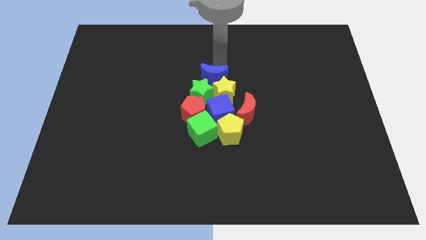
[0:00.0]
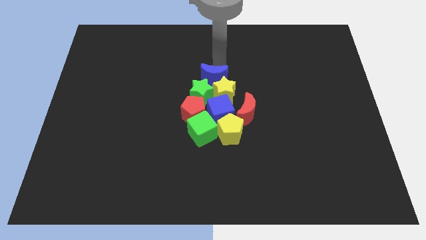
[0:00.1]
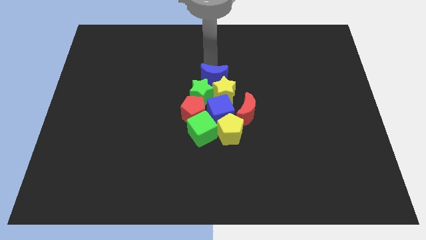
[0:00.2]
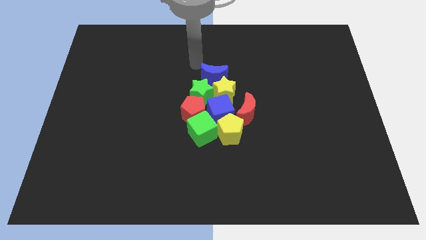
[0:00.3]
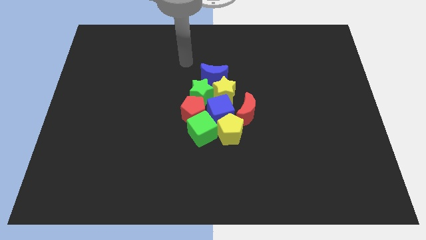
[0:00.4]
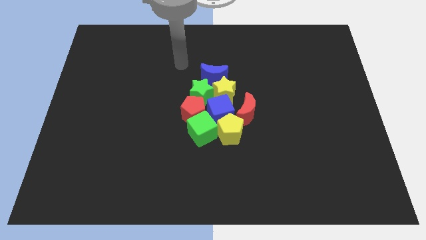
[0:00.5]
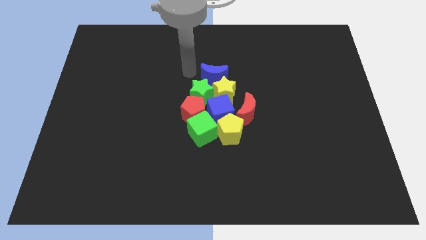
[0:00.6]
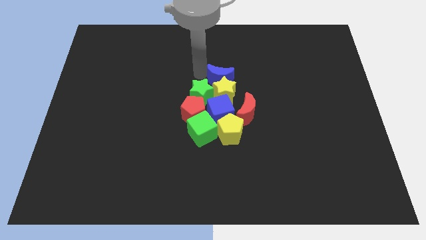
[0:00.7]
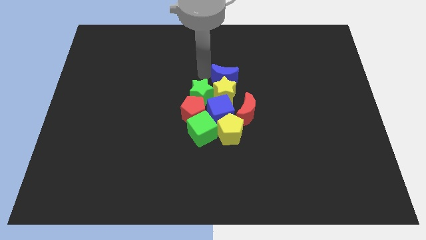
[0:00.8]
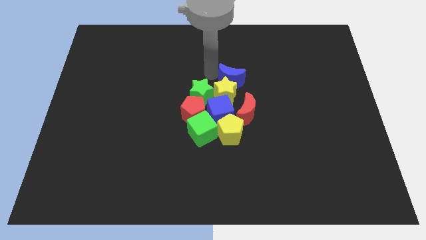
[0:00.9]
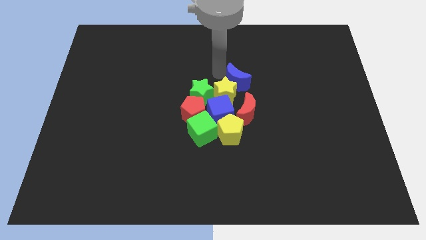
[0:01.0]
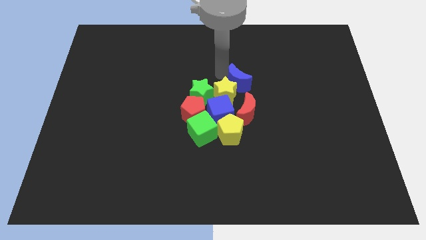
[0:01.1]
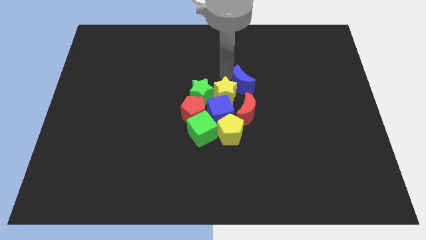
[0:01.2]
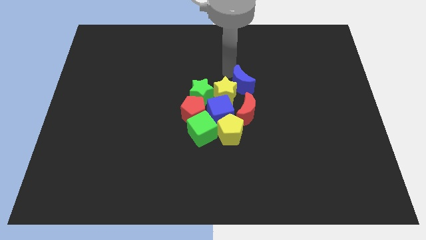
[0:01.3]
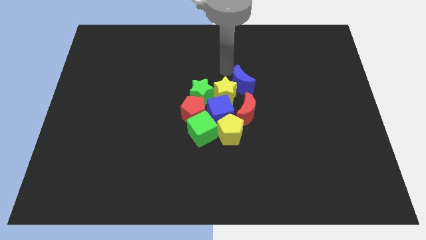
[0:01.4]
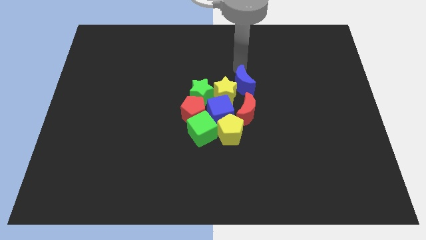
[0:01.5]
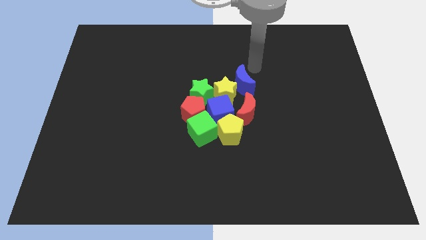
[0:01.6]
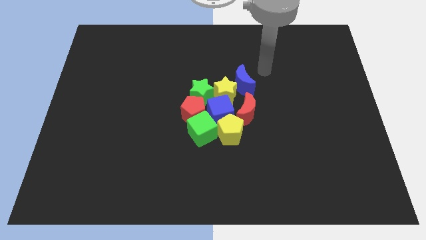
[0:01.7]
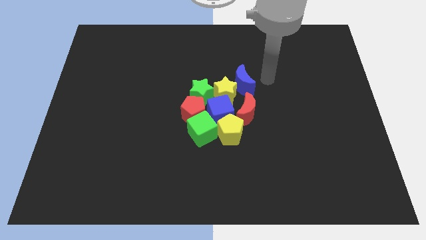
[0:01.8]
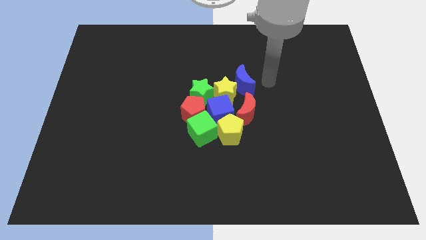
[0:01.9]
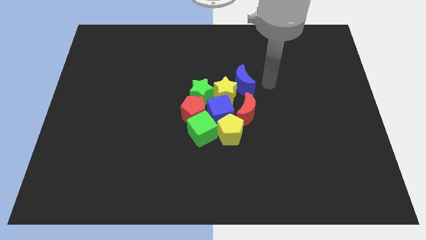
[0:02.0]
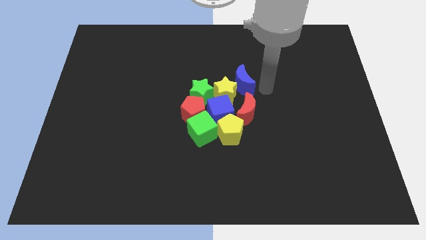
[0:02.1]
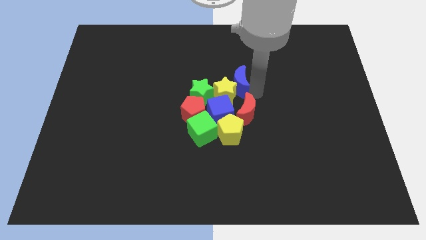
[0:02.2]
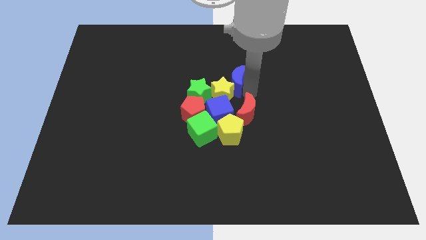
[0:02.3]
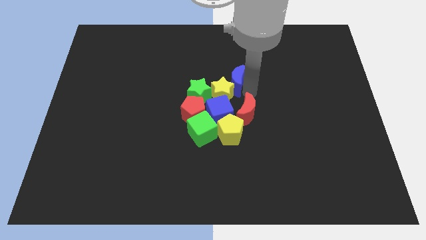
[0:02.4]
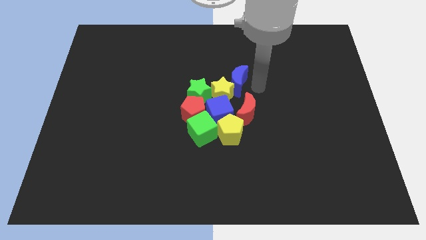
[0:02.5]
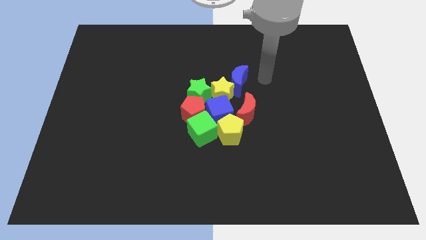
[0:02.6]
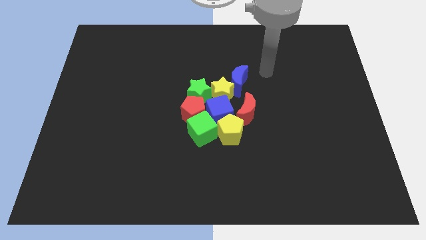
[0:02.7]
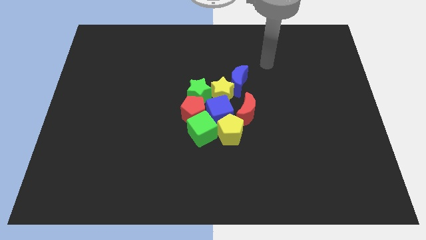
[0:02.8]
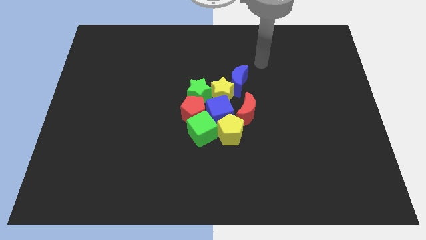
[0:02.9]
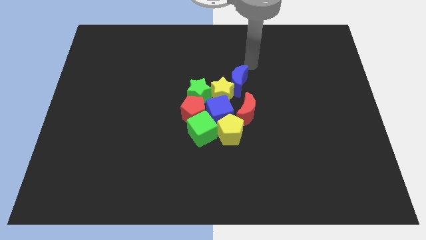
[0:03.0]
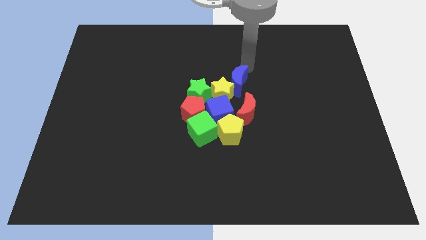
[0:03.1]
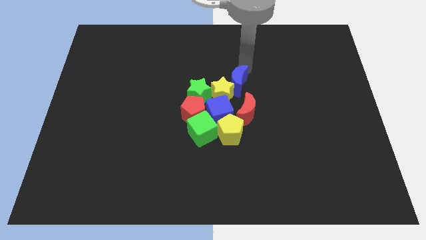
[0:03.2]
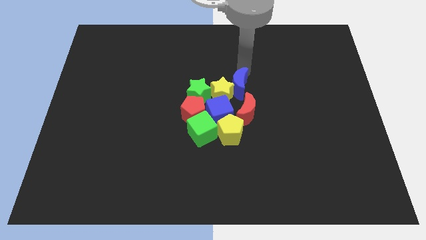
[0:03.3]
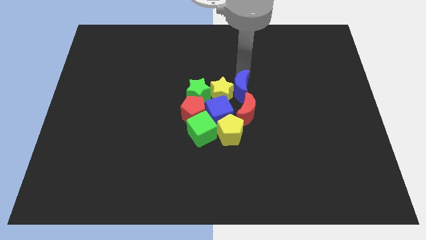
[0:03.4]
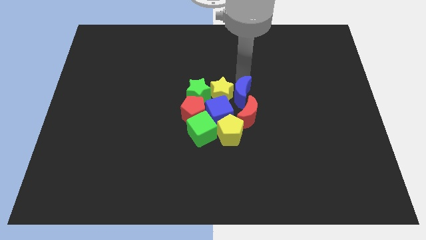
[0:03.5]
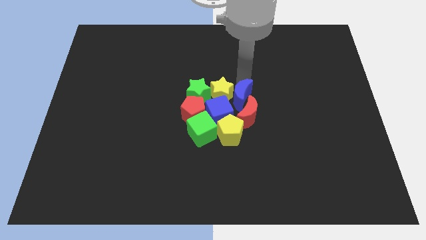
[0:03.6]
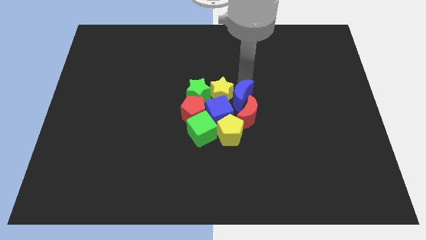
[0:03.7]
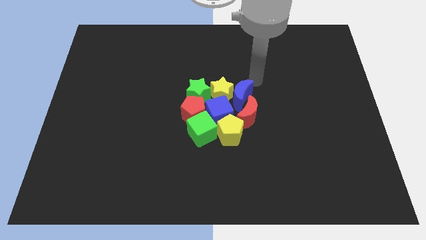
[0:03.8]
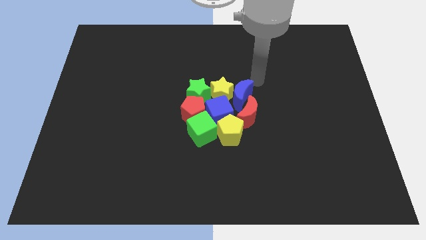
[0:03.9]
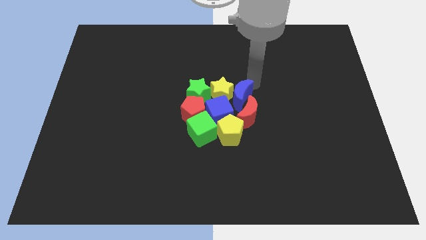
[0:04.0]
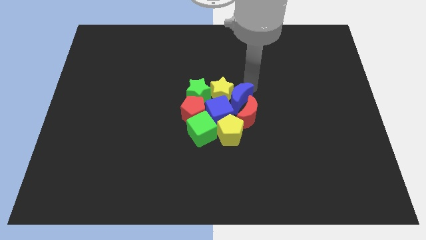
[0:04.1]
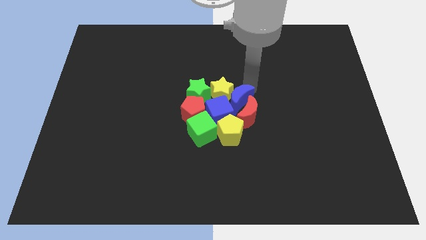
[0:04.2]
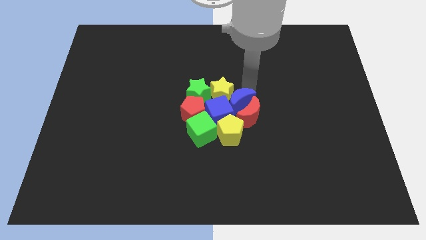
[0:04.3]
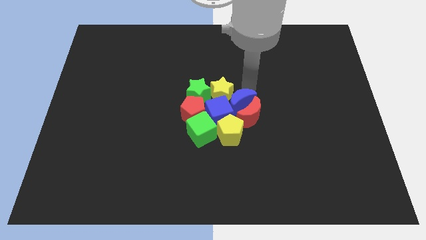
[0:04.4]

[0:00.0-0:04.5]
place the blue crescent in between the yellow star and red crescent

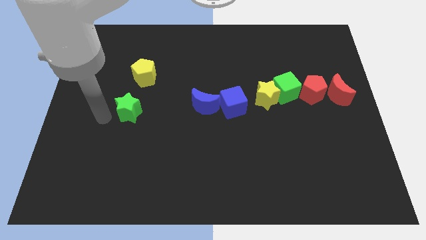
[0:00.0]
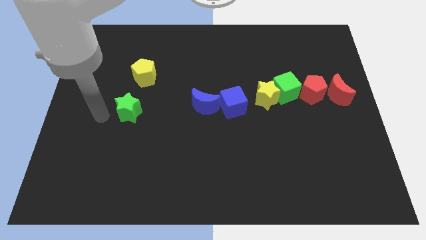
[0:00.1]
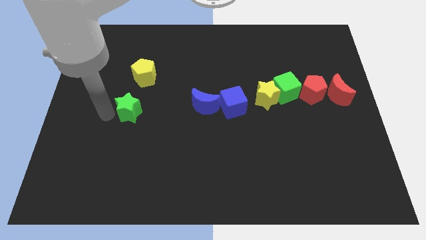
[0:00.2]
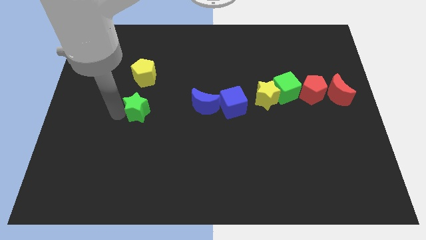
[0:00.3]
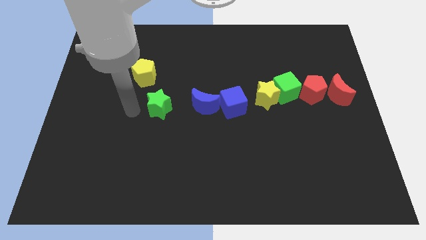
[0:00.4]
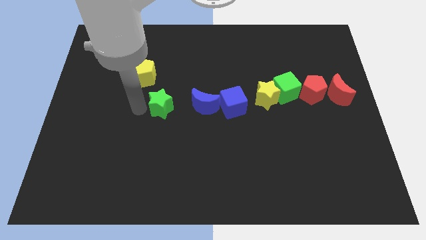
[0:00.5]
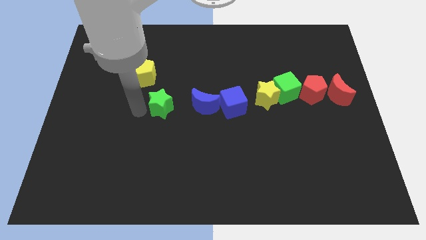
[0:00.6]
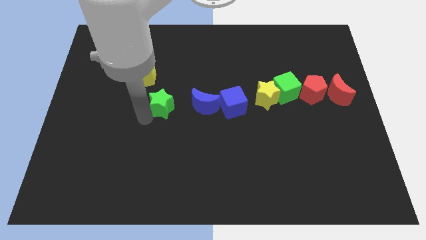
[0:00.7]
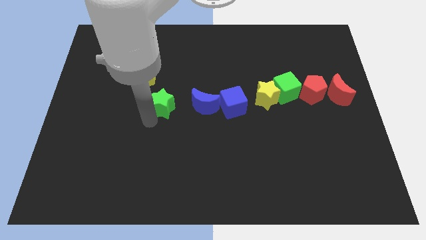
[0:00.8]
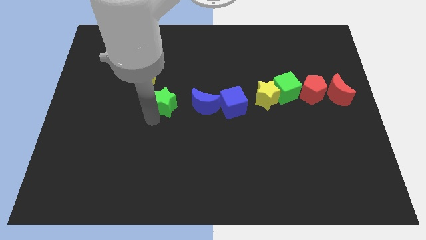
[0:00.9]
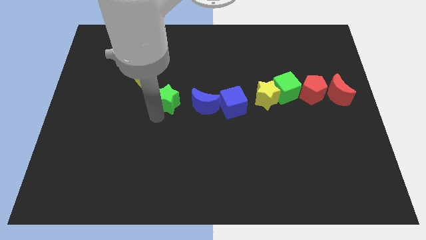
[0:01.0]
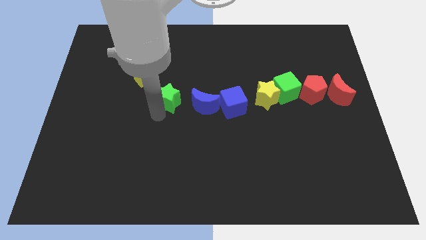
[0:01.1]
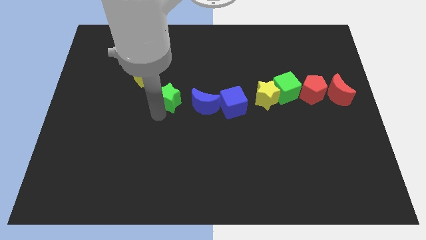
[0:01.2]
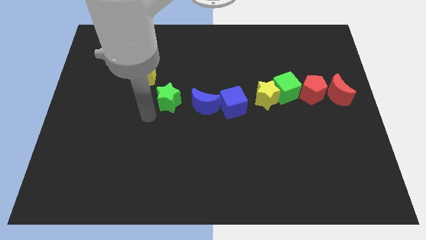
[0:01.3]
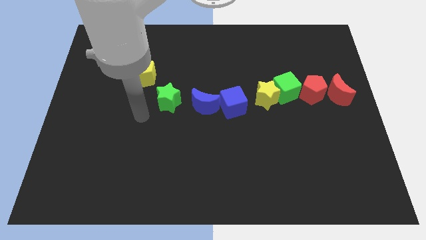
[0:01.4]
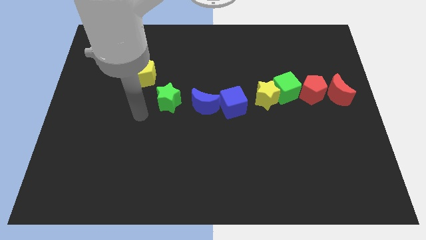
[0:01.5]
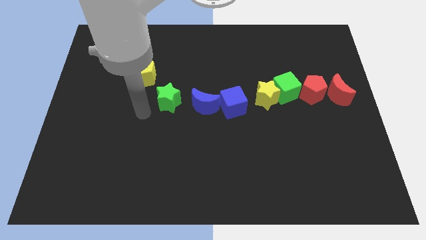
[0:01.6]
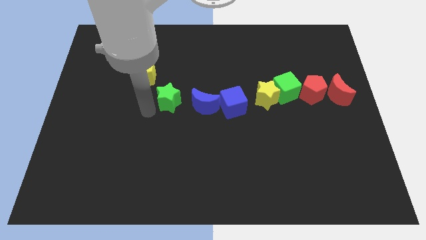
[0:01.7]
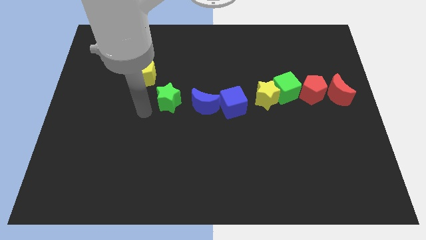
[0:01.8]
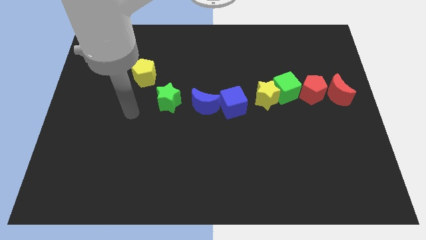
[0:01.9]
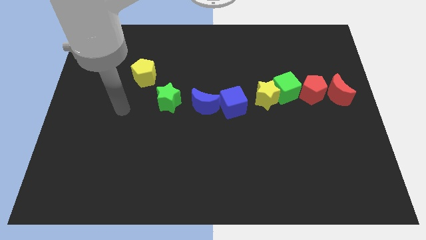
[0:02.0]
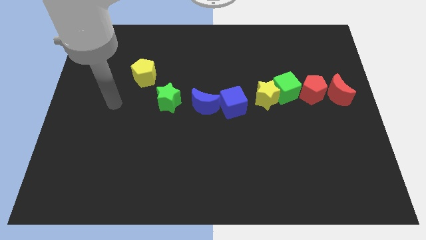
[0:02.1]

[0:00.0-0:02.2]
place green star to the left of the blue moon

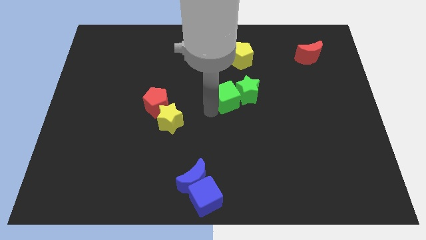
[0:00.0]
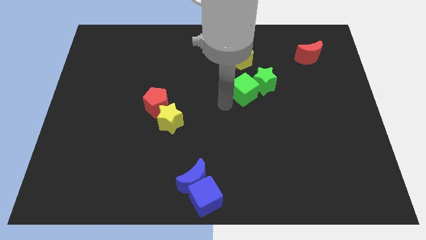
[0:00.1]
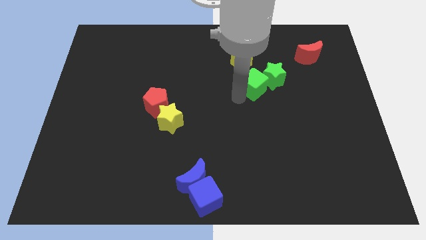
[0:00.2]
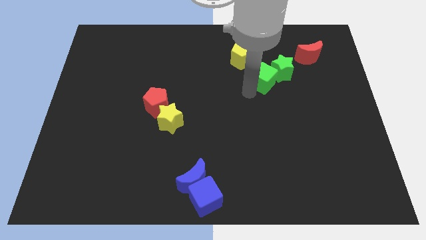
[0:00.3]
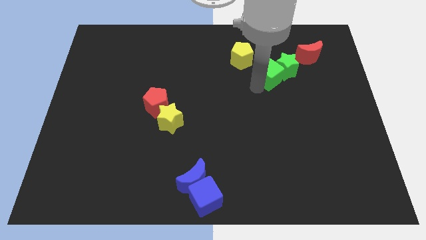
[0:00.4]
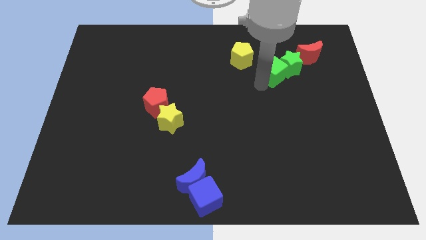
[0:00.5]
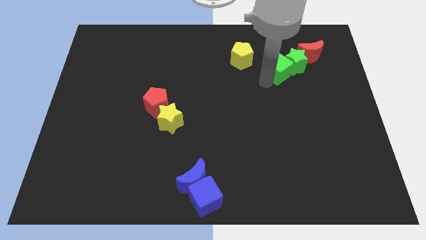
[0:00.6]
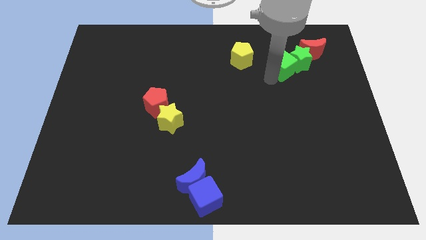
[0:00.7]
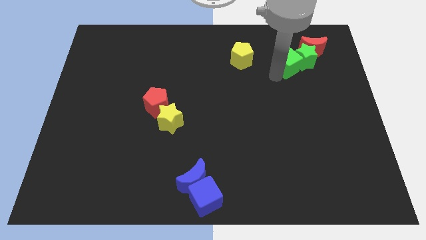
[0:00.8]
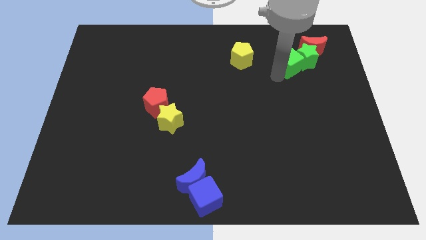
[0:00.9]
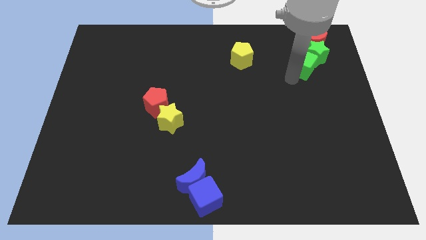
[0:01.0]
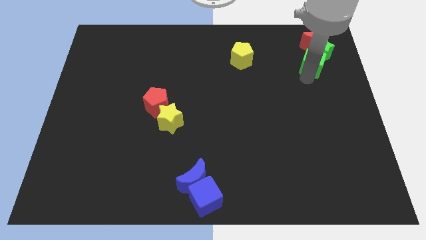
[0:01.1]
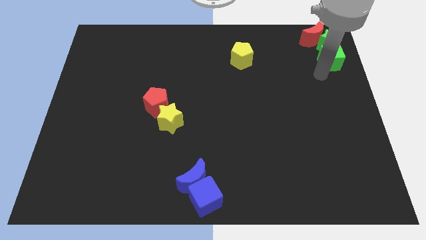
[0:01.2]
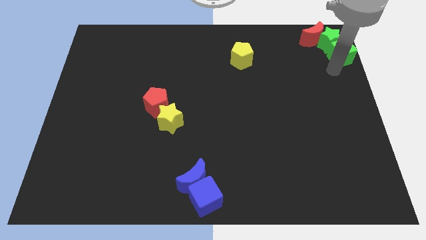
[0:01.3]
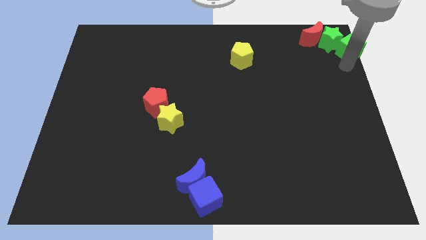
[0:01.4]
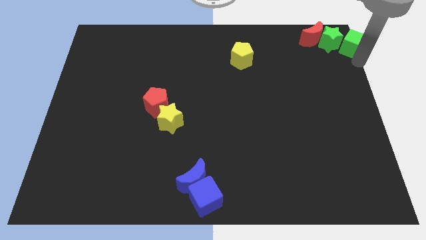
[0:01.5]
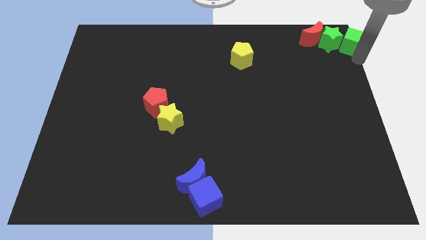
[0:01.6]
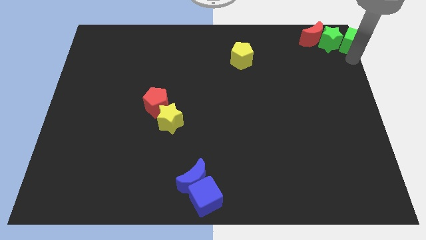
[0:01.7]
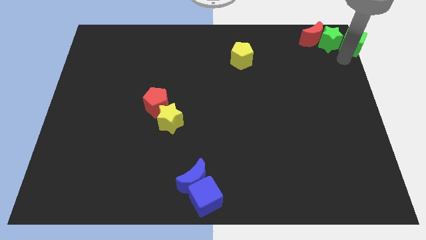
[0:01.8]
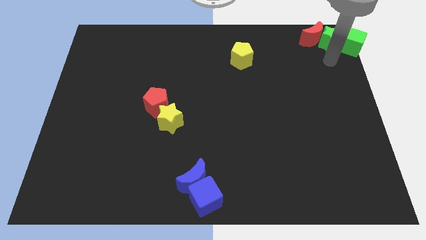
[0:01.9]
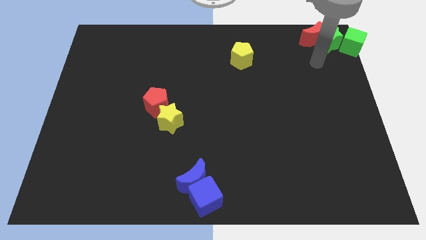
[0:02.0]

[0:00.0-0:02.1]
push green star and green cube towards the top right corner of the board

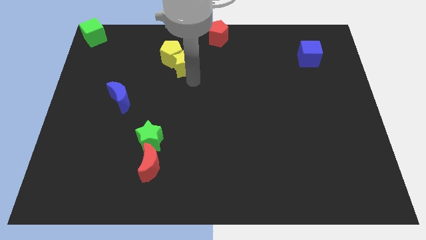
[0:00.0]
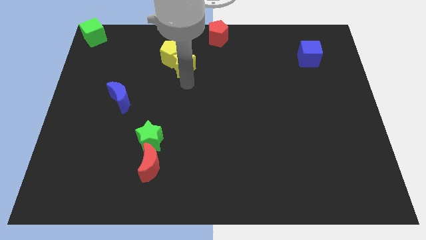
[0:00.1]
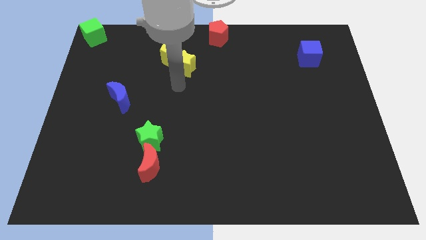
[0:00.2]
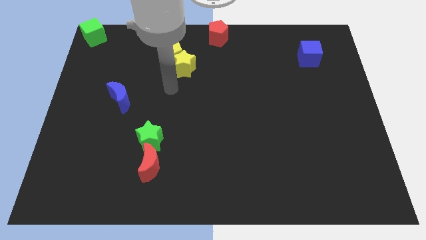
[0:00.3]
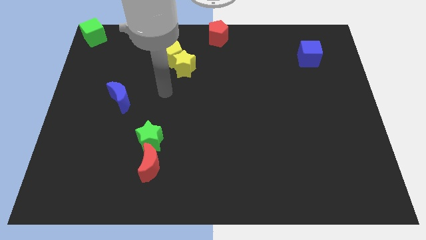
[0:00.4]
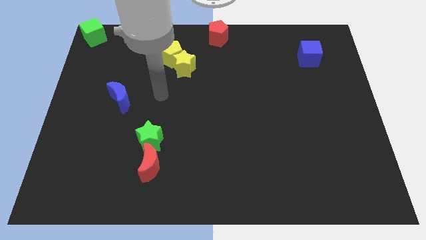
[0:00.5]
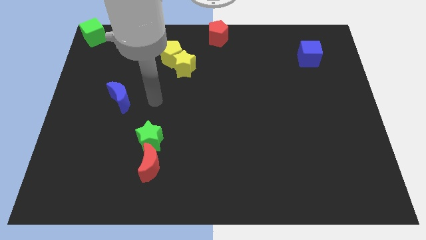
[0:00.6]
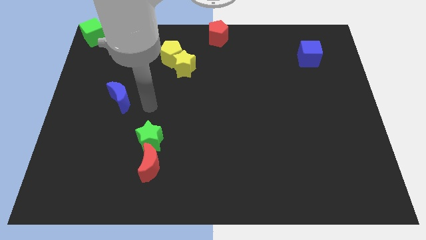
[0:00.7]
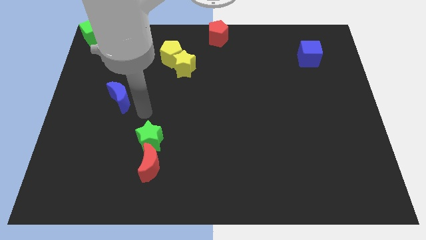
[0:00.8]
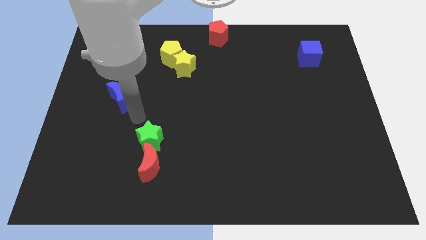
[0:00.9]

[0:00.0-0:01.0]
point your arm in between the blue moon and green star
